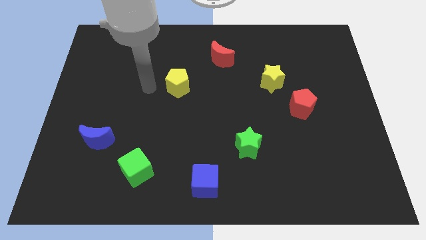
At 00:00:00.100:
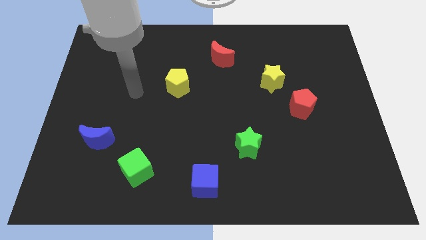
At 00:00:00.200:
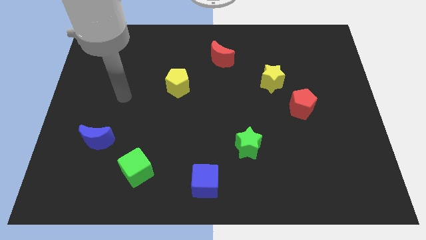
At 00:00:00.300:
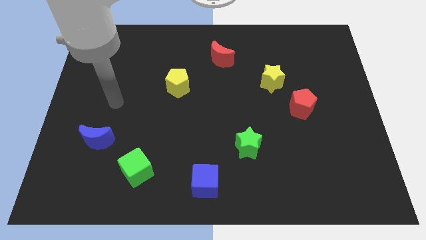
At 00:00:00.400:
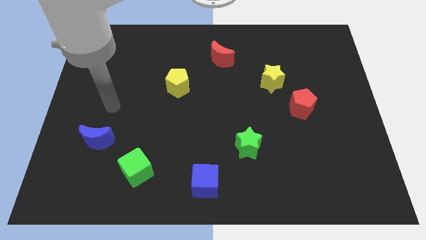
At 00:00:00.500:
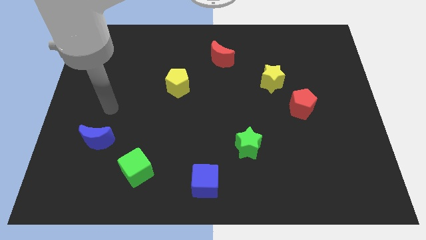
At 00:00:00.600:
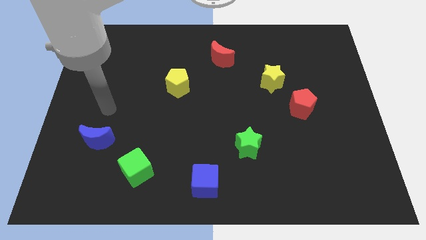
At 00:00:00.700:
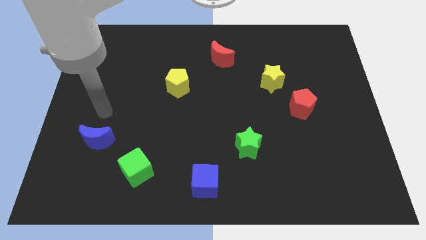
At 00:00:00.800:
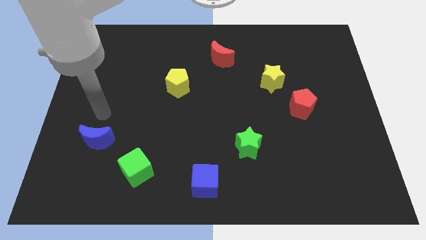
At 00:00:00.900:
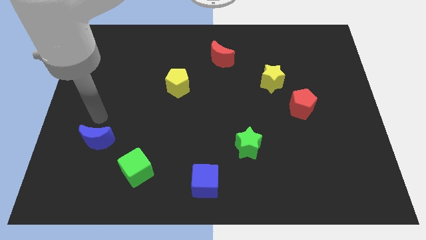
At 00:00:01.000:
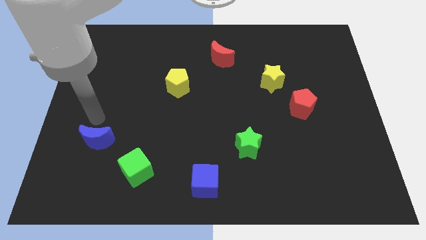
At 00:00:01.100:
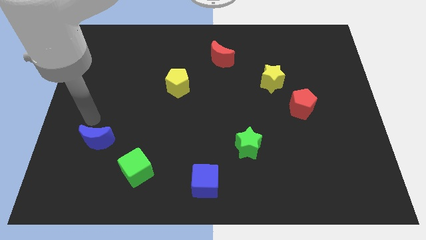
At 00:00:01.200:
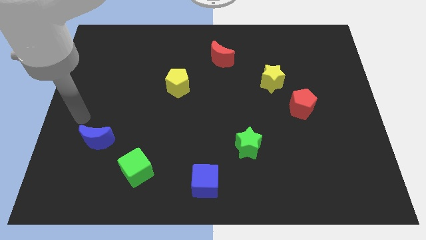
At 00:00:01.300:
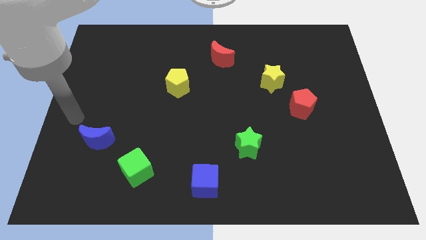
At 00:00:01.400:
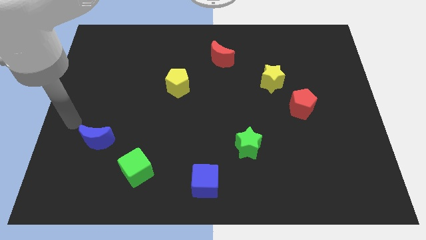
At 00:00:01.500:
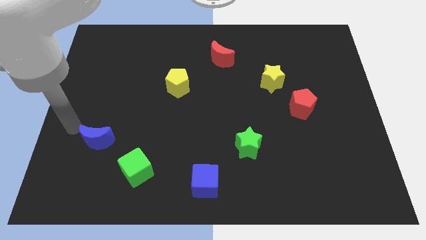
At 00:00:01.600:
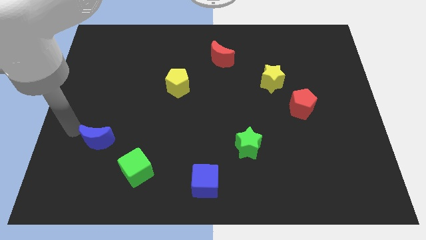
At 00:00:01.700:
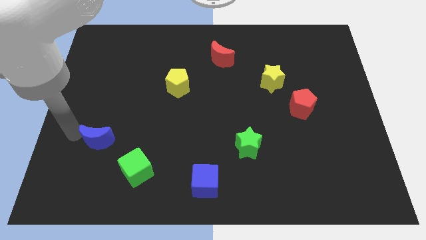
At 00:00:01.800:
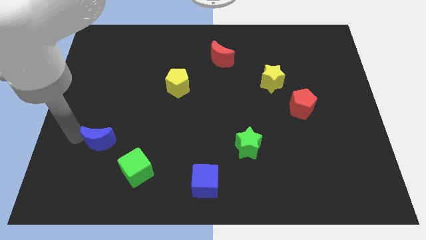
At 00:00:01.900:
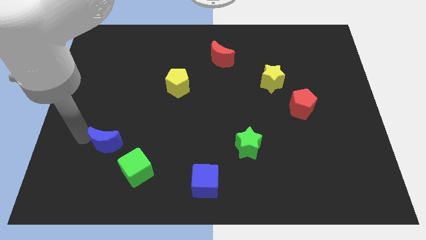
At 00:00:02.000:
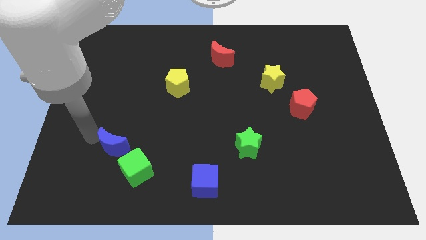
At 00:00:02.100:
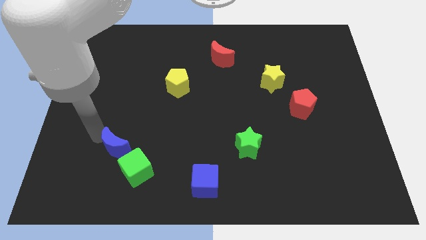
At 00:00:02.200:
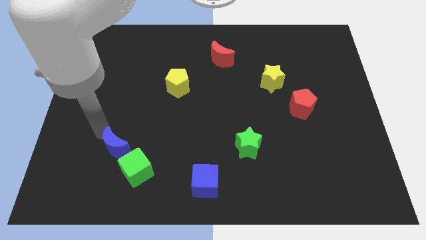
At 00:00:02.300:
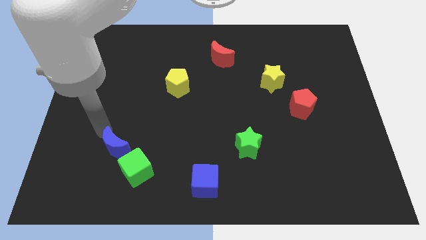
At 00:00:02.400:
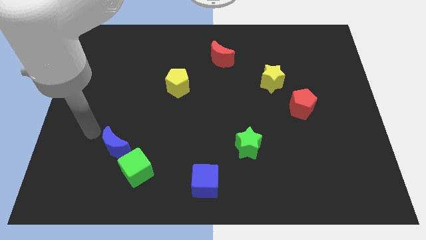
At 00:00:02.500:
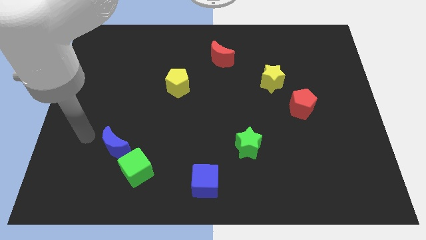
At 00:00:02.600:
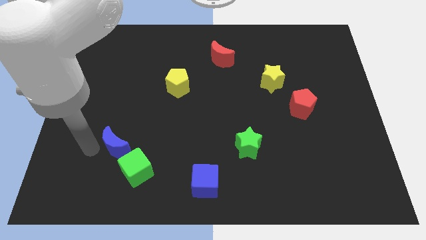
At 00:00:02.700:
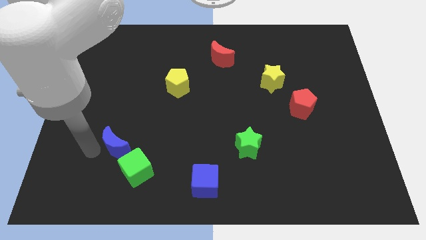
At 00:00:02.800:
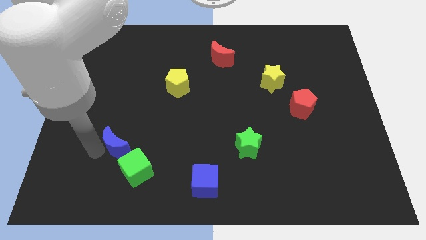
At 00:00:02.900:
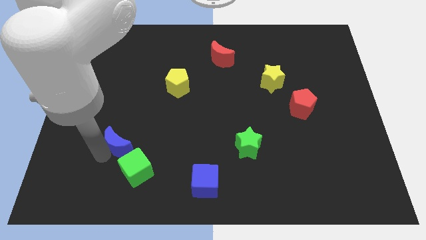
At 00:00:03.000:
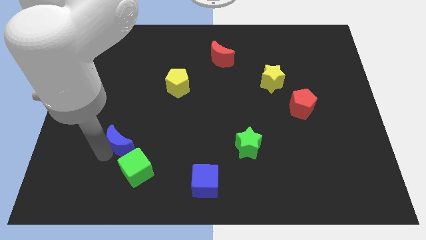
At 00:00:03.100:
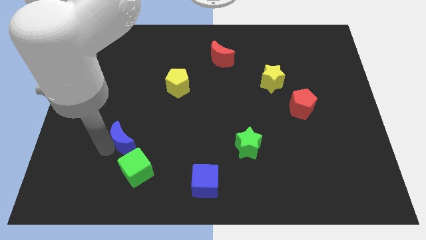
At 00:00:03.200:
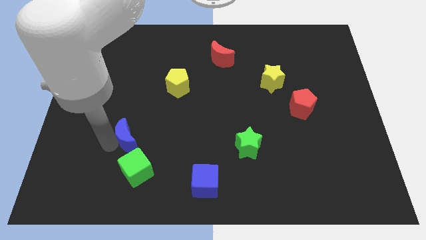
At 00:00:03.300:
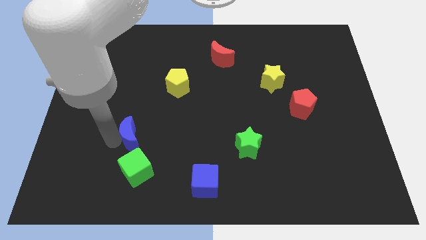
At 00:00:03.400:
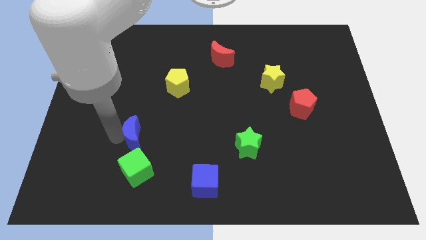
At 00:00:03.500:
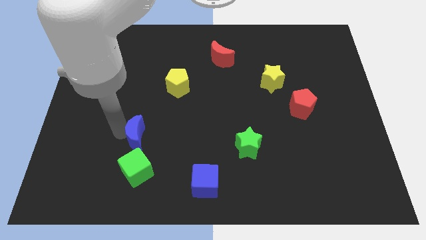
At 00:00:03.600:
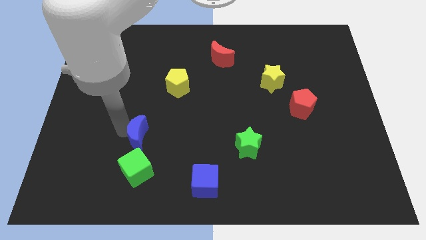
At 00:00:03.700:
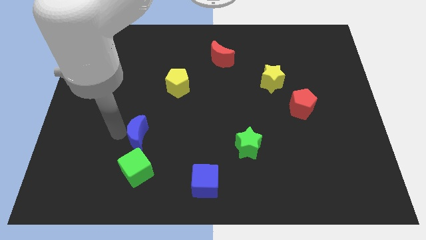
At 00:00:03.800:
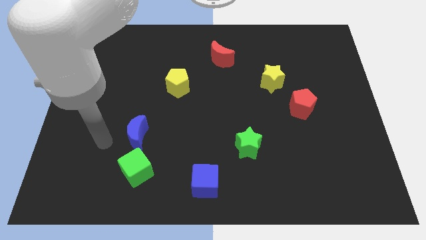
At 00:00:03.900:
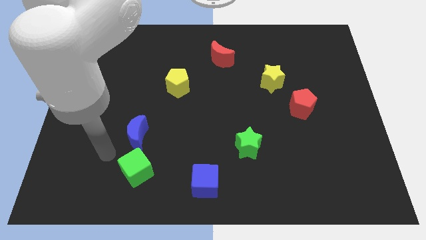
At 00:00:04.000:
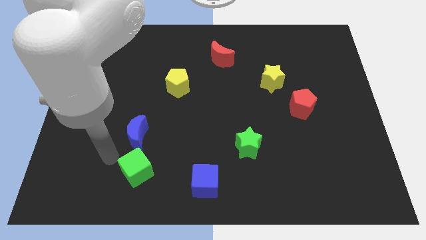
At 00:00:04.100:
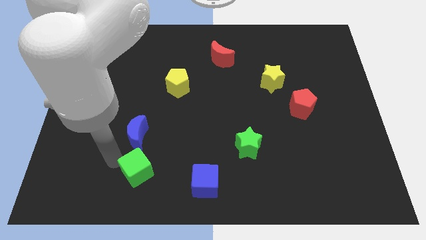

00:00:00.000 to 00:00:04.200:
move the blue crescent above the green cube

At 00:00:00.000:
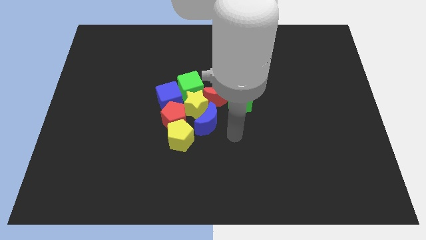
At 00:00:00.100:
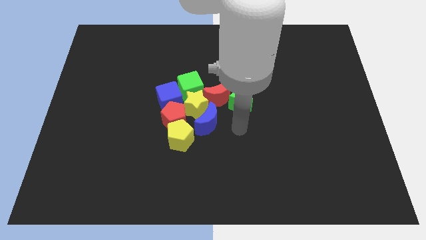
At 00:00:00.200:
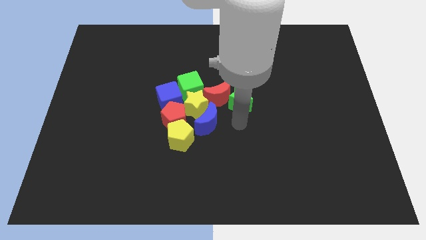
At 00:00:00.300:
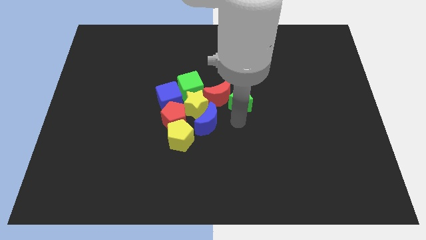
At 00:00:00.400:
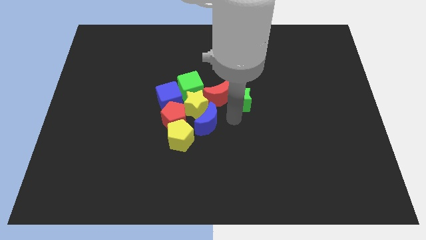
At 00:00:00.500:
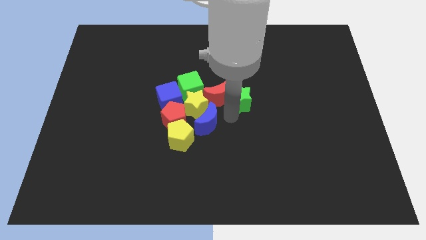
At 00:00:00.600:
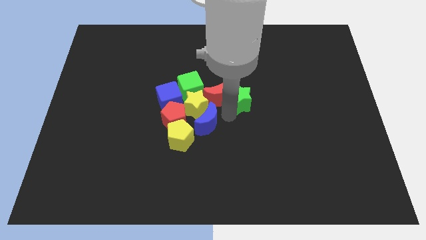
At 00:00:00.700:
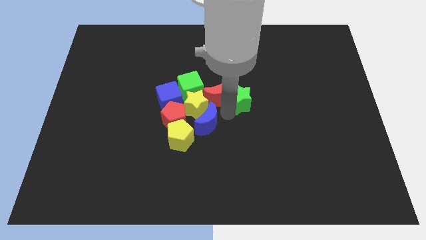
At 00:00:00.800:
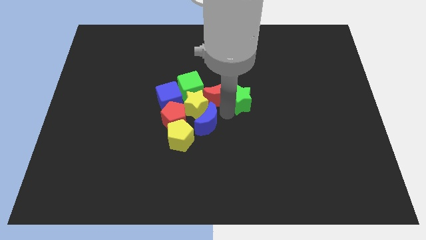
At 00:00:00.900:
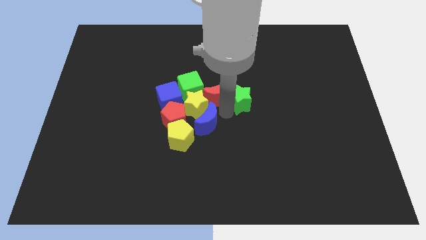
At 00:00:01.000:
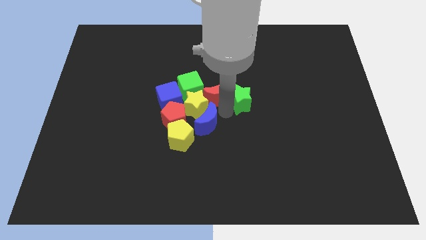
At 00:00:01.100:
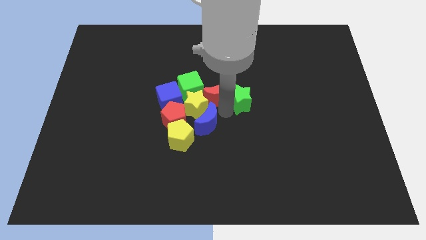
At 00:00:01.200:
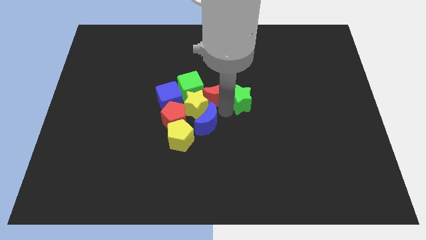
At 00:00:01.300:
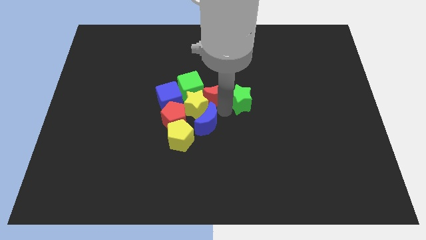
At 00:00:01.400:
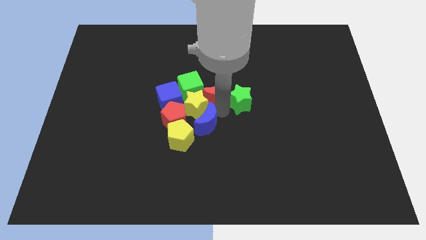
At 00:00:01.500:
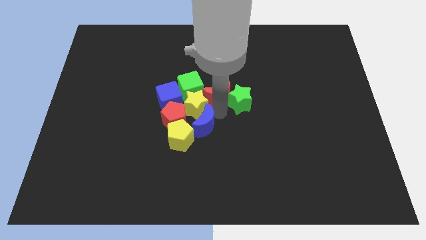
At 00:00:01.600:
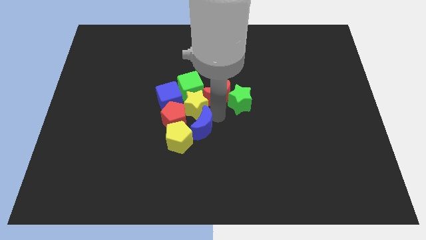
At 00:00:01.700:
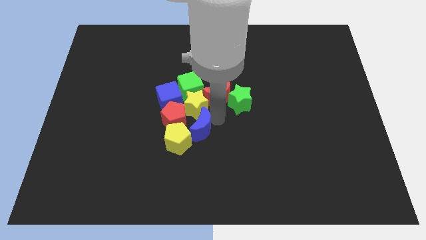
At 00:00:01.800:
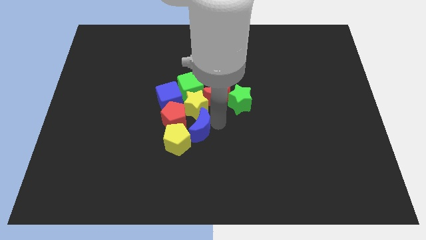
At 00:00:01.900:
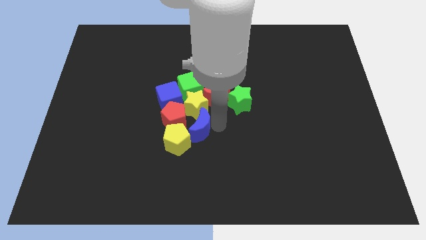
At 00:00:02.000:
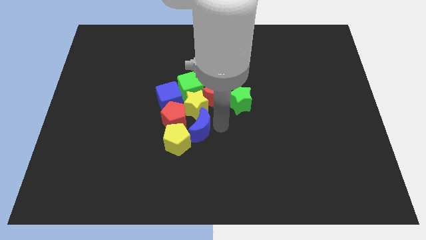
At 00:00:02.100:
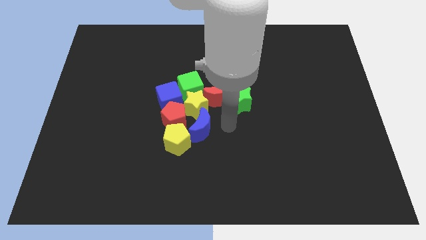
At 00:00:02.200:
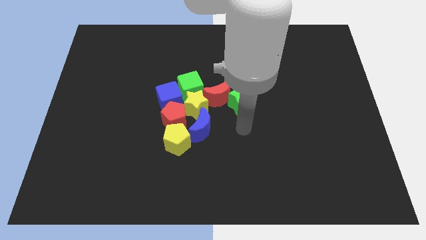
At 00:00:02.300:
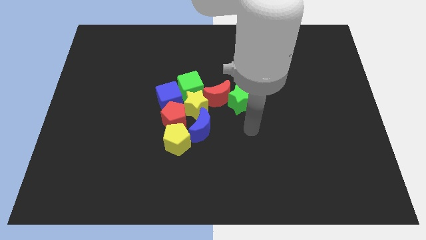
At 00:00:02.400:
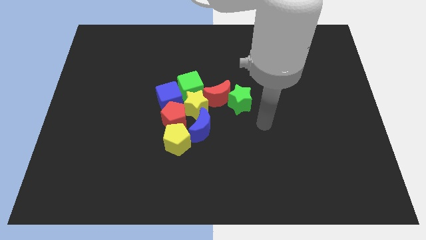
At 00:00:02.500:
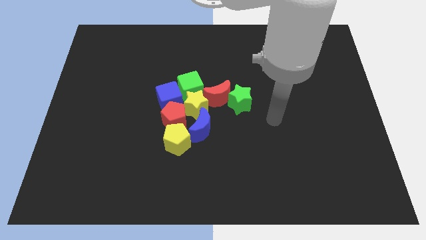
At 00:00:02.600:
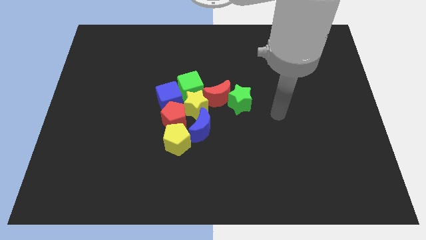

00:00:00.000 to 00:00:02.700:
push the blue moon into the yellow pentagon

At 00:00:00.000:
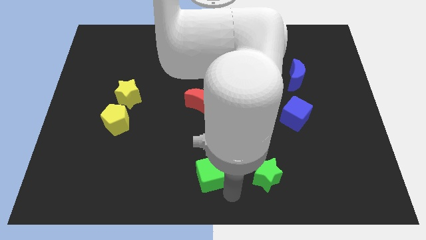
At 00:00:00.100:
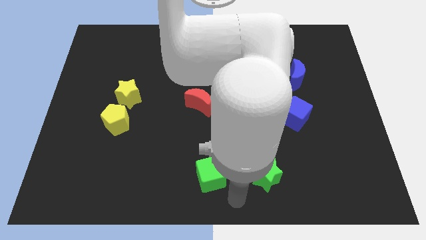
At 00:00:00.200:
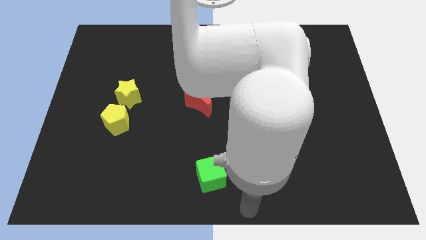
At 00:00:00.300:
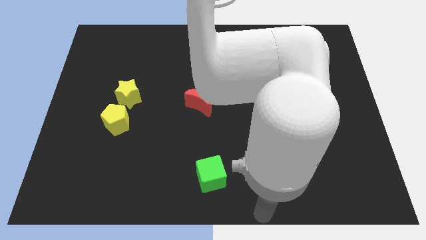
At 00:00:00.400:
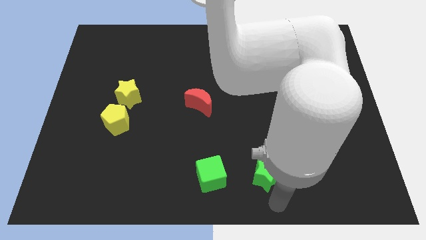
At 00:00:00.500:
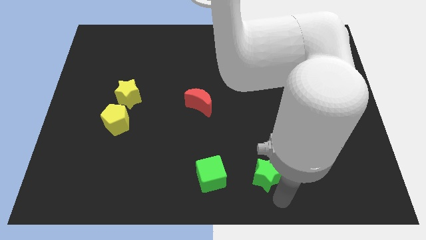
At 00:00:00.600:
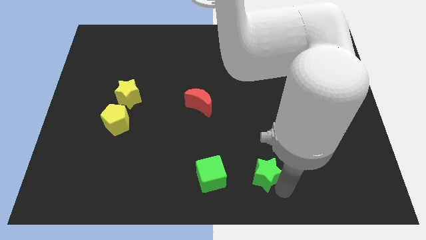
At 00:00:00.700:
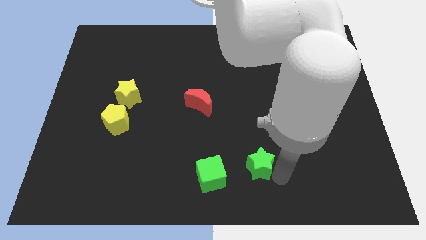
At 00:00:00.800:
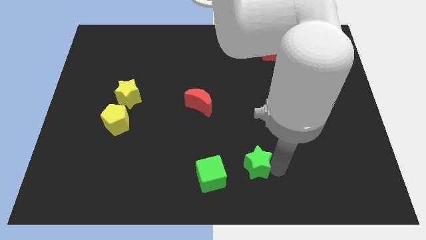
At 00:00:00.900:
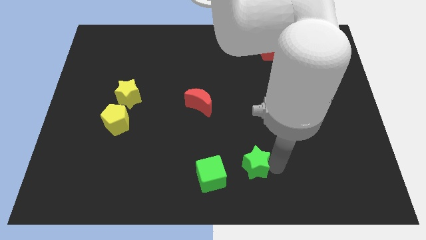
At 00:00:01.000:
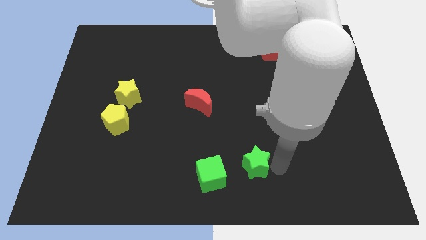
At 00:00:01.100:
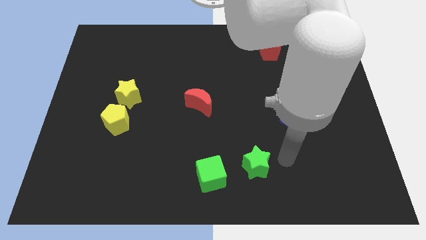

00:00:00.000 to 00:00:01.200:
slightly push the green star to the right of the green cube

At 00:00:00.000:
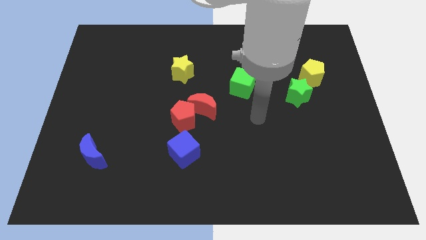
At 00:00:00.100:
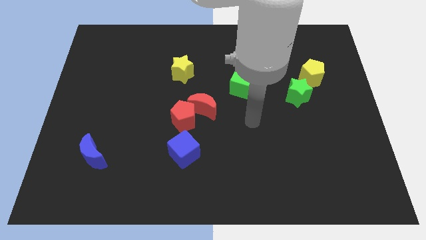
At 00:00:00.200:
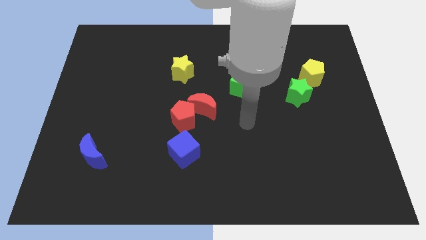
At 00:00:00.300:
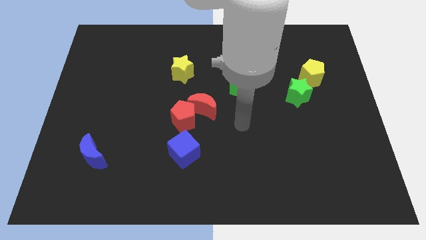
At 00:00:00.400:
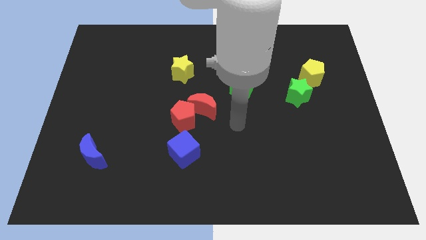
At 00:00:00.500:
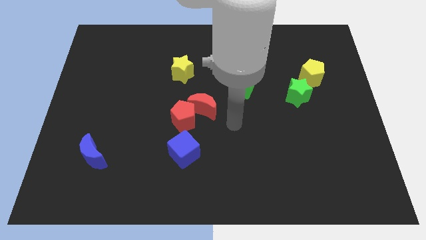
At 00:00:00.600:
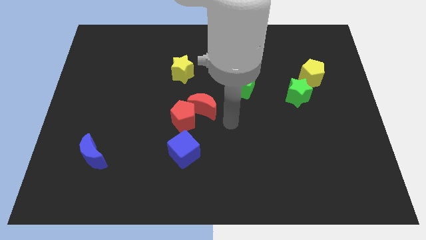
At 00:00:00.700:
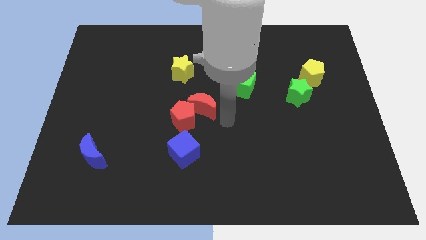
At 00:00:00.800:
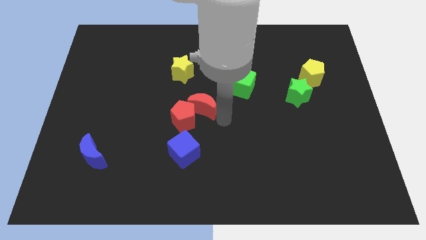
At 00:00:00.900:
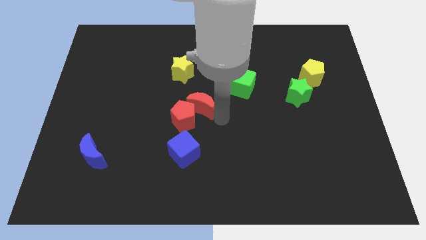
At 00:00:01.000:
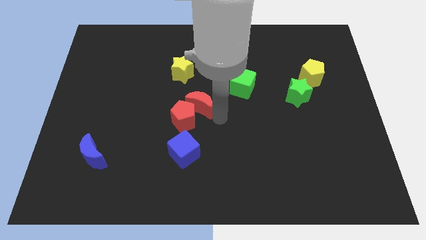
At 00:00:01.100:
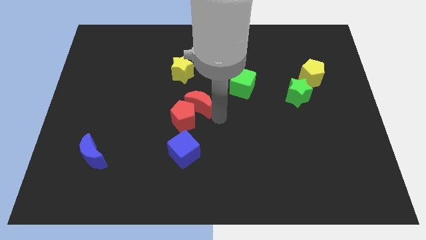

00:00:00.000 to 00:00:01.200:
slightly push the red crescent towards the red pentagon
